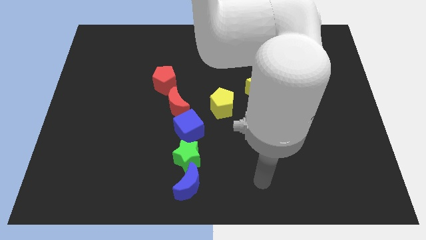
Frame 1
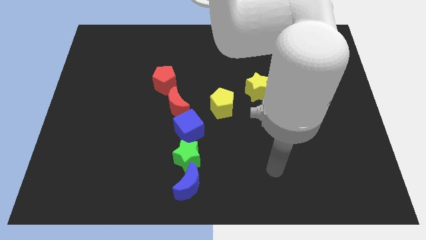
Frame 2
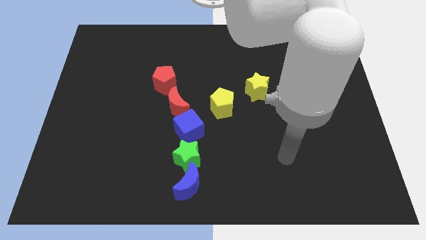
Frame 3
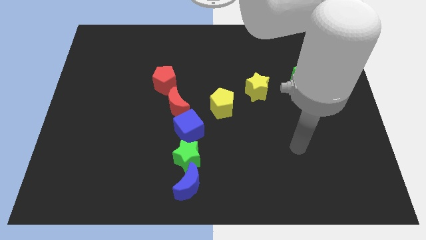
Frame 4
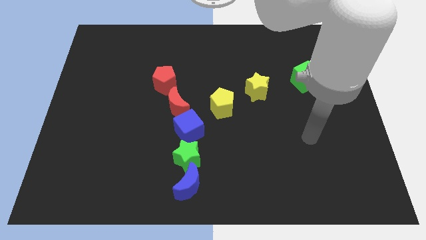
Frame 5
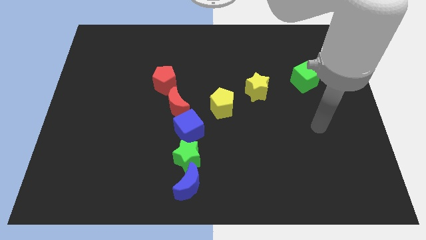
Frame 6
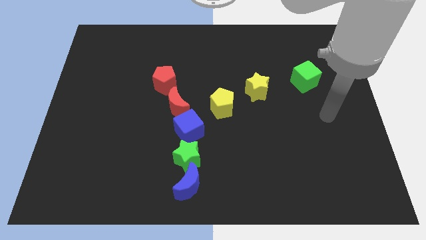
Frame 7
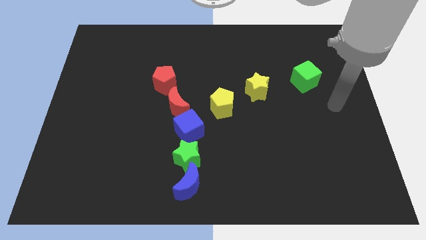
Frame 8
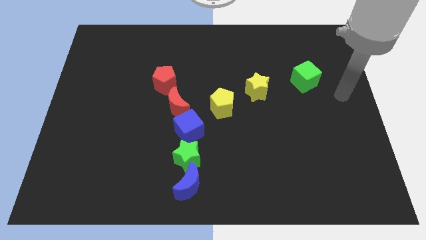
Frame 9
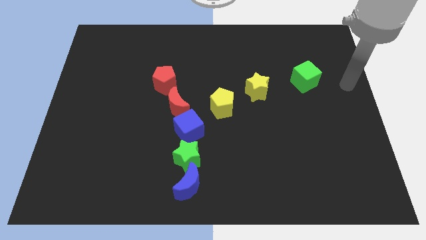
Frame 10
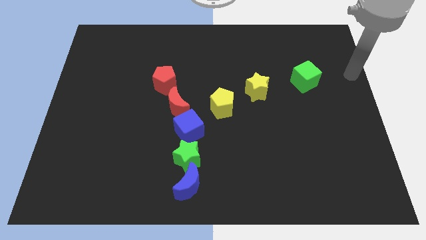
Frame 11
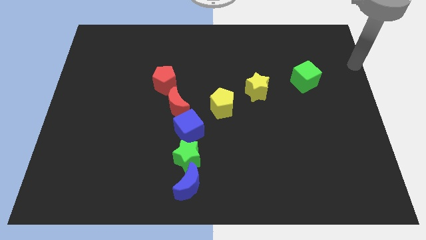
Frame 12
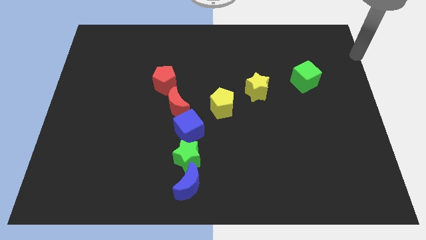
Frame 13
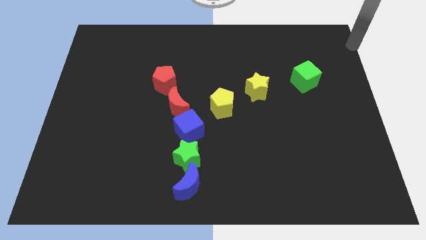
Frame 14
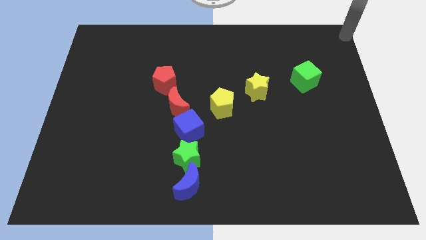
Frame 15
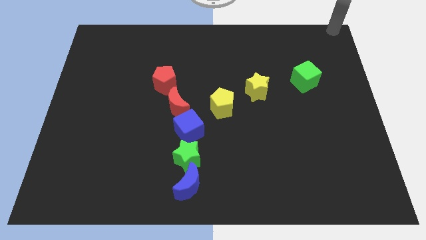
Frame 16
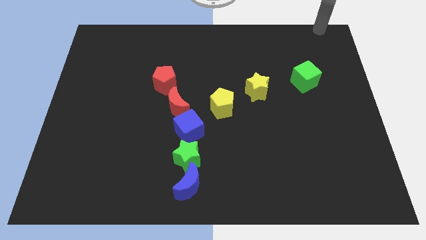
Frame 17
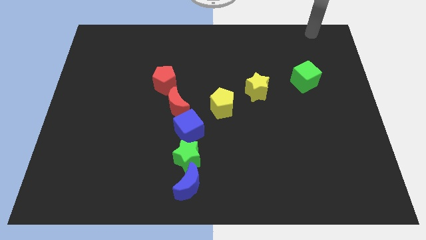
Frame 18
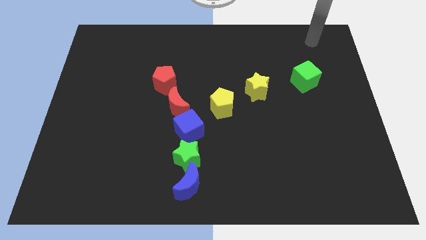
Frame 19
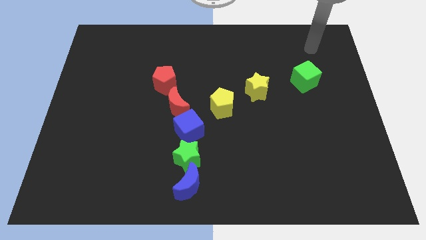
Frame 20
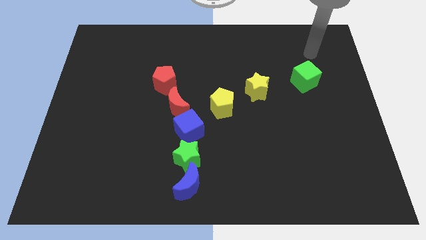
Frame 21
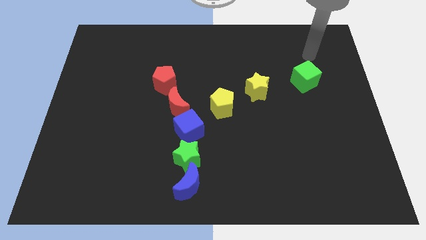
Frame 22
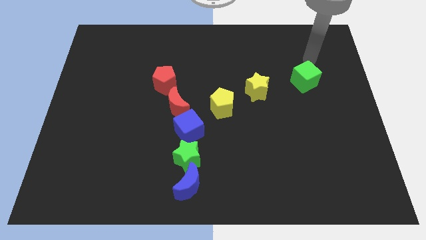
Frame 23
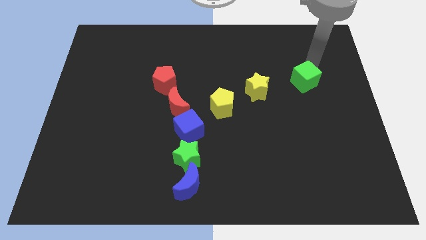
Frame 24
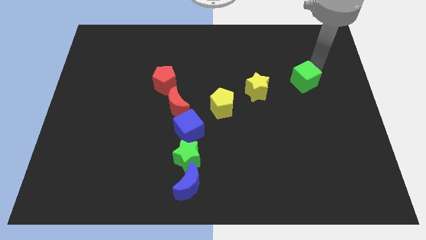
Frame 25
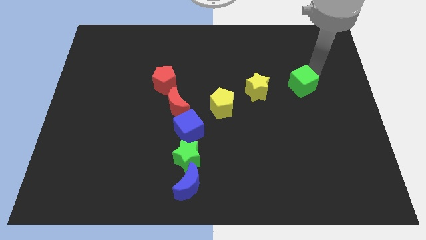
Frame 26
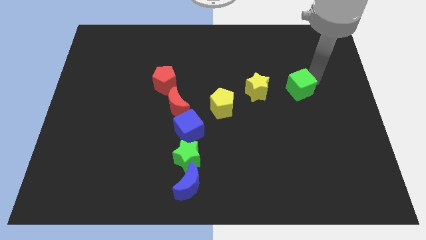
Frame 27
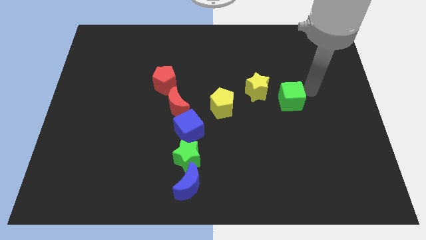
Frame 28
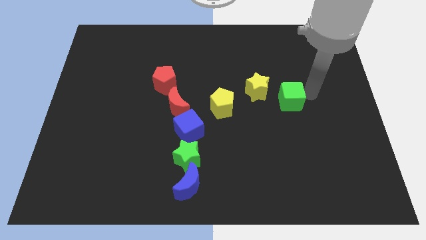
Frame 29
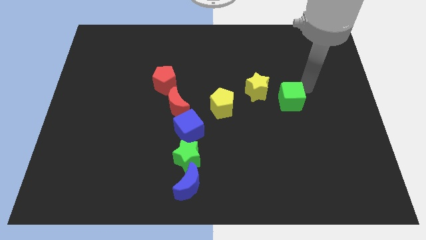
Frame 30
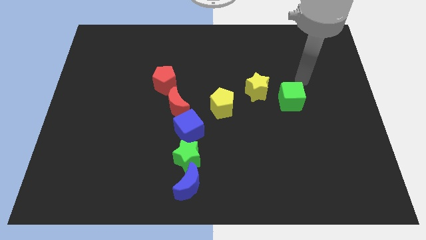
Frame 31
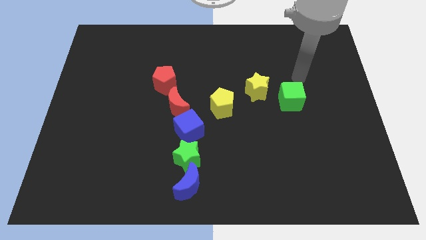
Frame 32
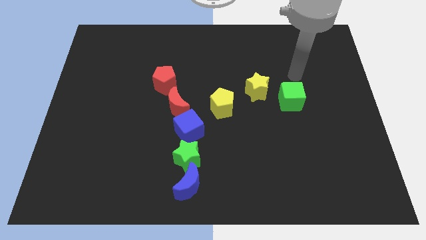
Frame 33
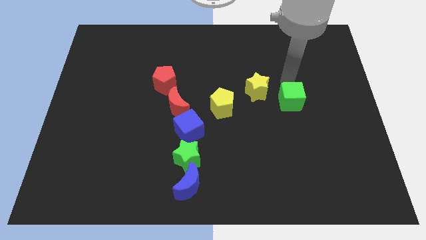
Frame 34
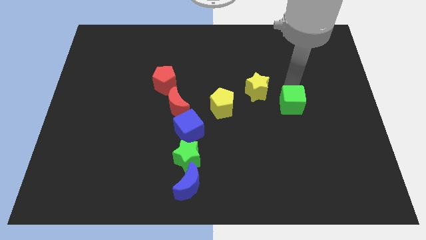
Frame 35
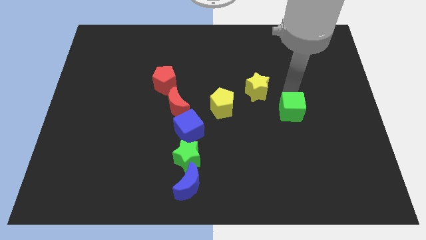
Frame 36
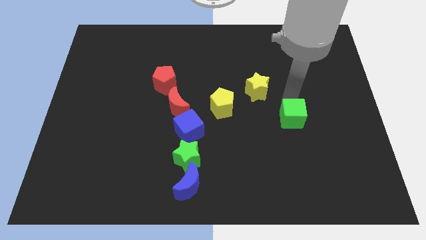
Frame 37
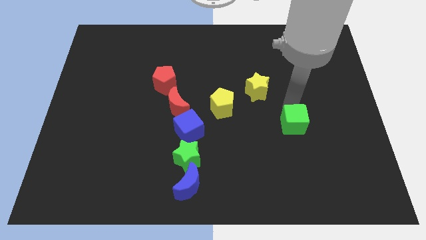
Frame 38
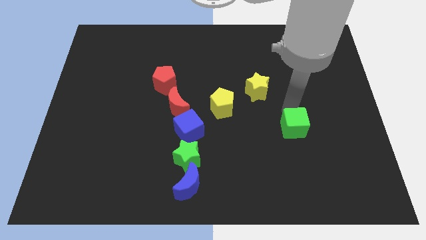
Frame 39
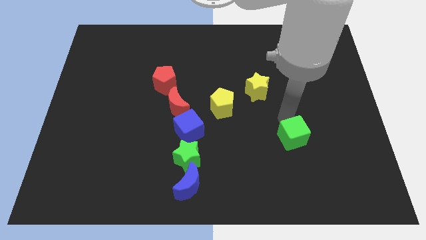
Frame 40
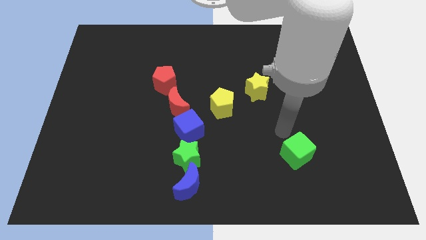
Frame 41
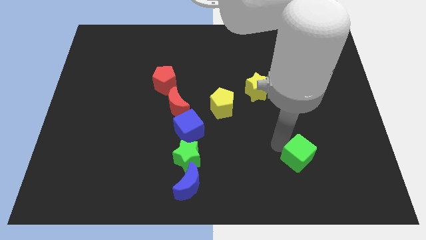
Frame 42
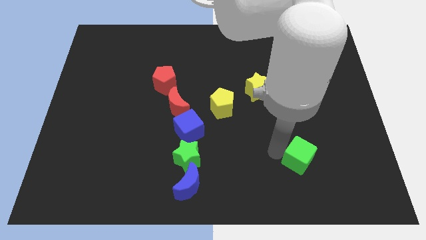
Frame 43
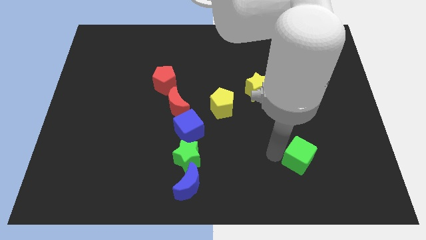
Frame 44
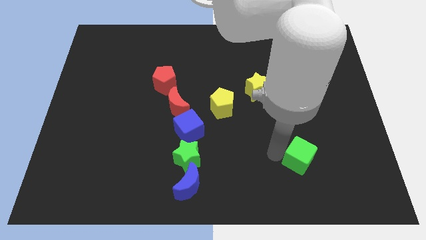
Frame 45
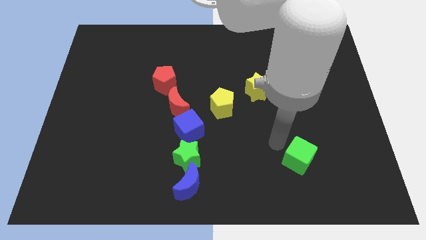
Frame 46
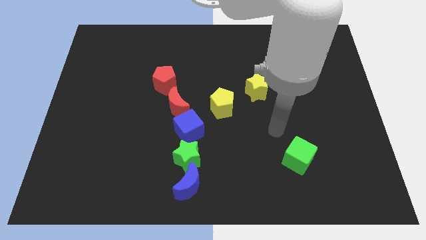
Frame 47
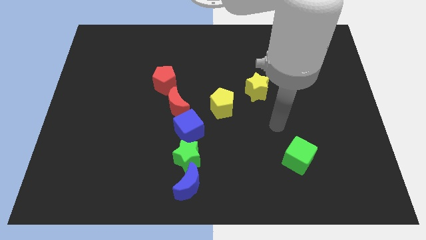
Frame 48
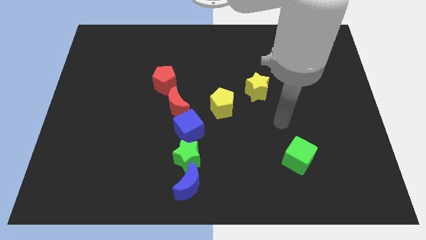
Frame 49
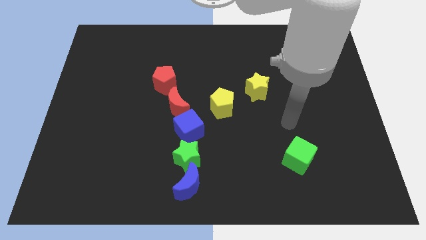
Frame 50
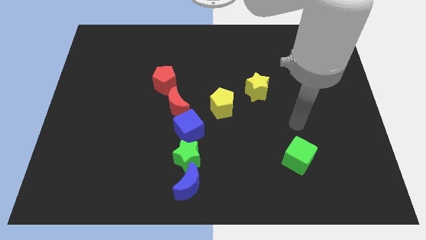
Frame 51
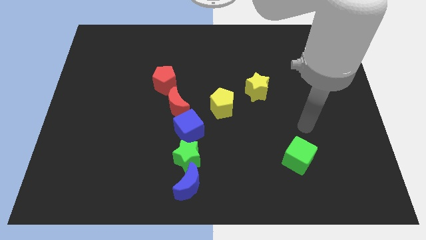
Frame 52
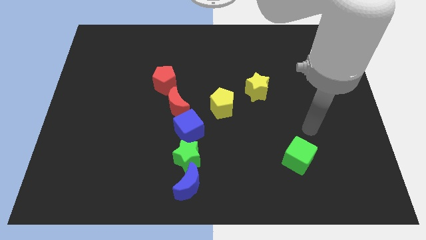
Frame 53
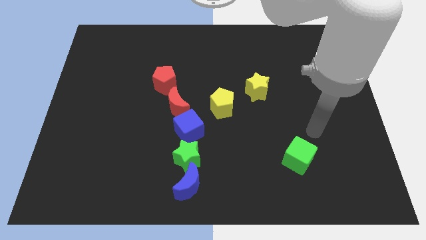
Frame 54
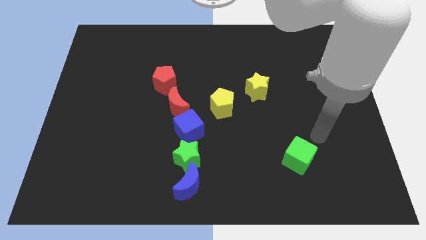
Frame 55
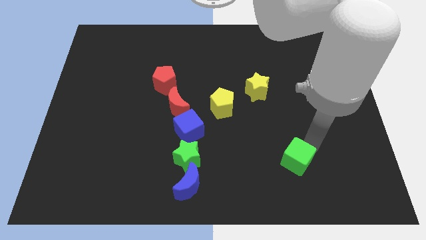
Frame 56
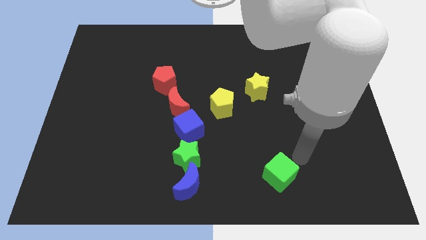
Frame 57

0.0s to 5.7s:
move the green cube to the bottom side

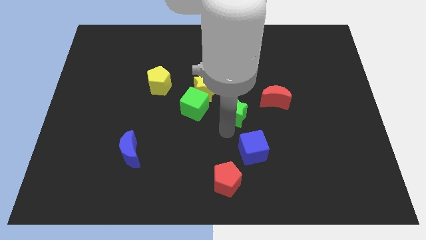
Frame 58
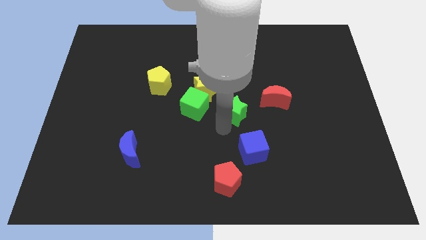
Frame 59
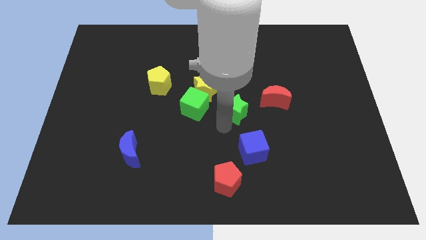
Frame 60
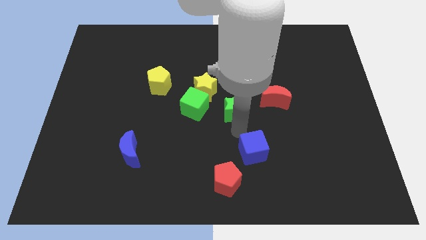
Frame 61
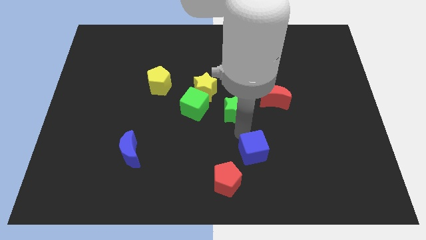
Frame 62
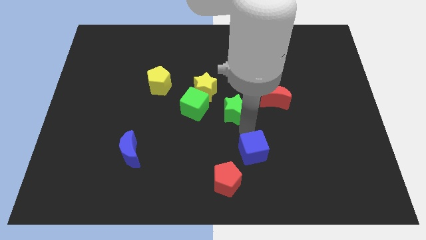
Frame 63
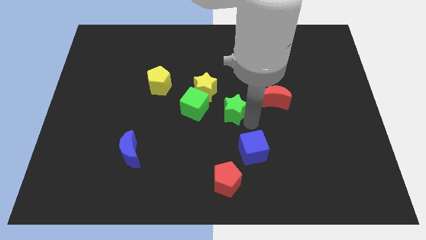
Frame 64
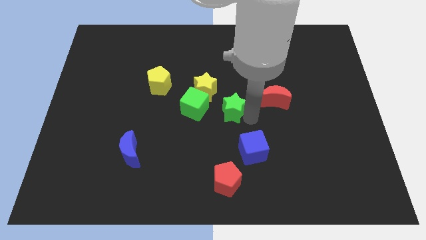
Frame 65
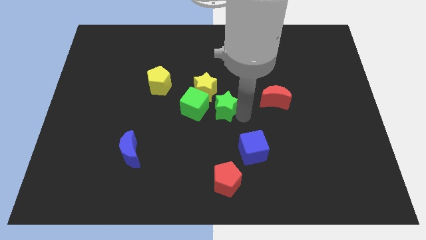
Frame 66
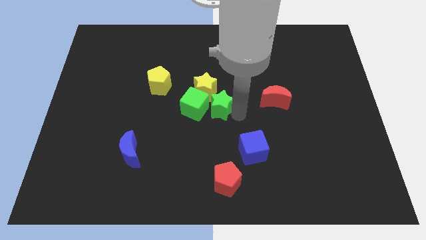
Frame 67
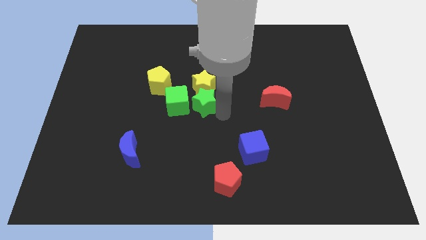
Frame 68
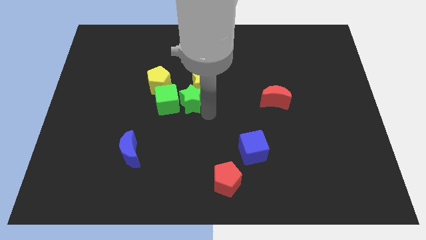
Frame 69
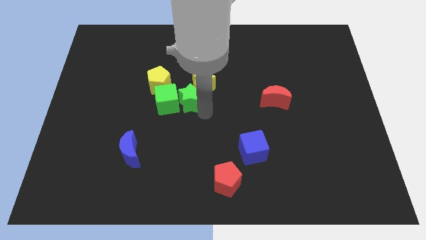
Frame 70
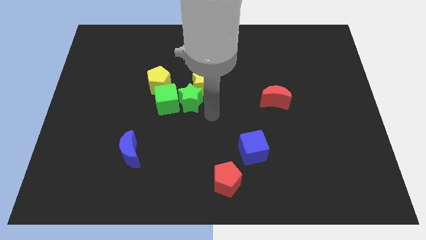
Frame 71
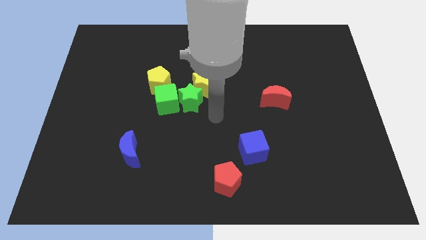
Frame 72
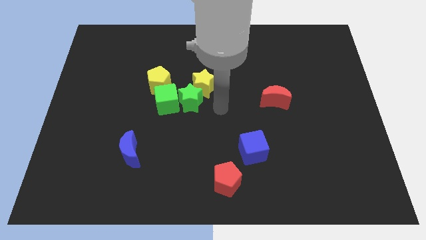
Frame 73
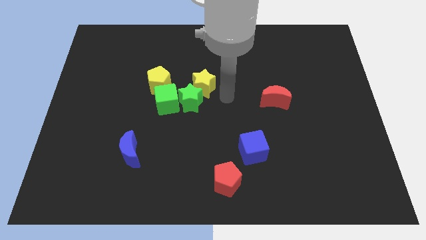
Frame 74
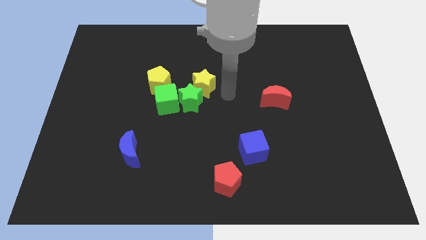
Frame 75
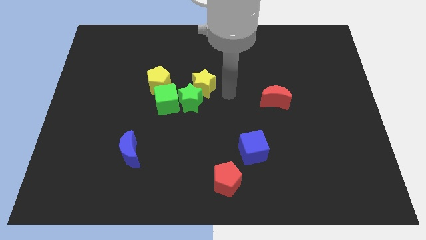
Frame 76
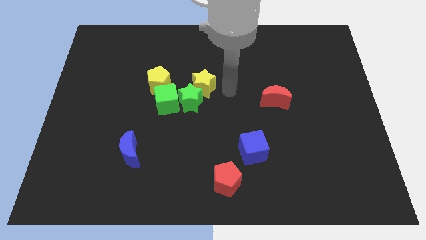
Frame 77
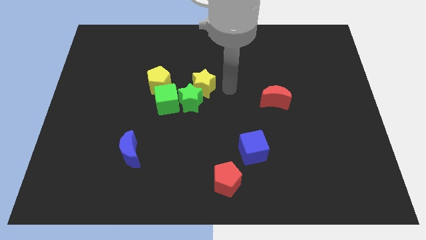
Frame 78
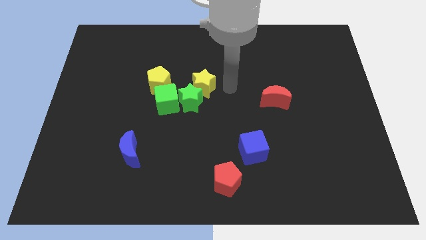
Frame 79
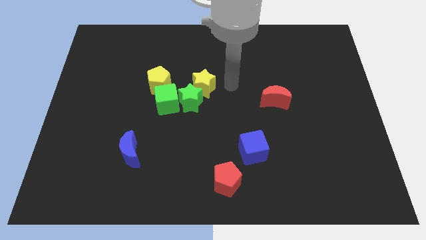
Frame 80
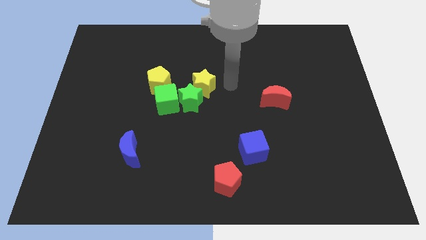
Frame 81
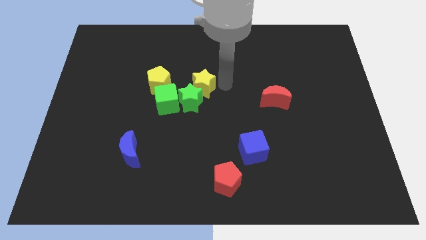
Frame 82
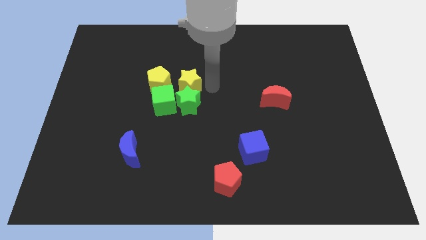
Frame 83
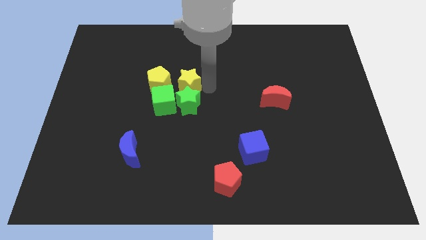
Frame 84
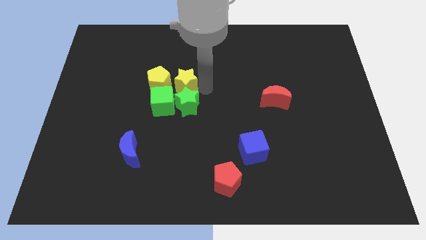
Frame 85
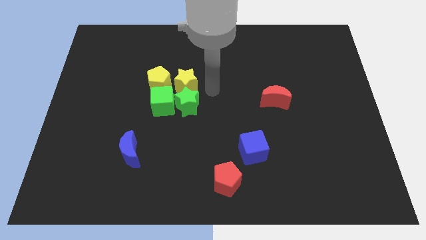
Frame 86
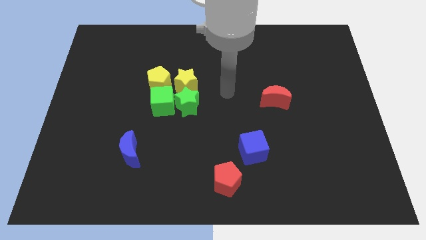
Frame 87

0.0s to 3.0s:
push yellow star into the group

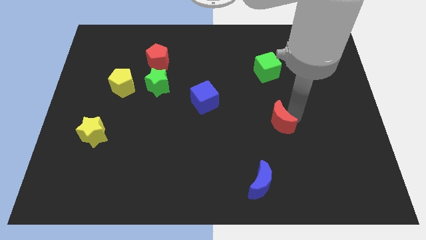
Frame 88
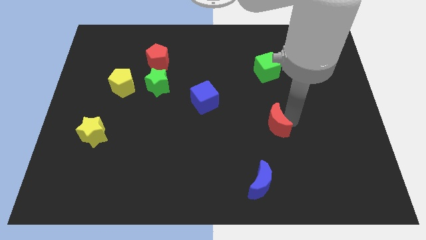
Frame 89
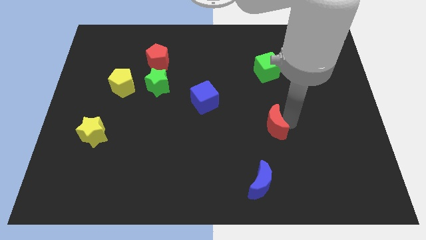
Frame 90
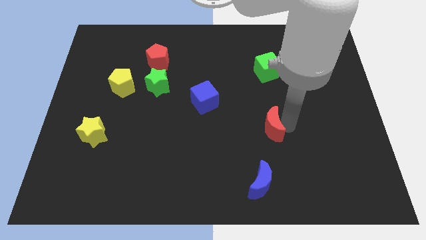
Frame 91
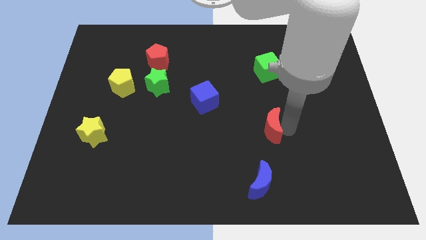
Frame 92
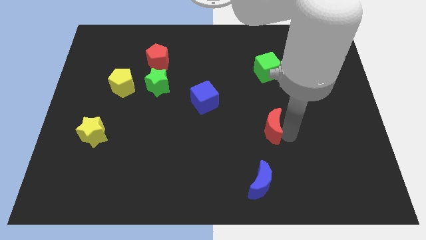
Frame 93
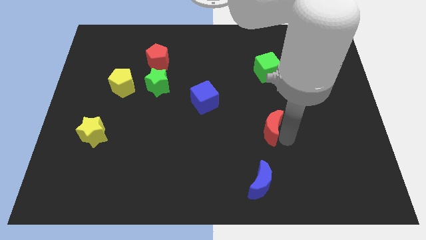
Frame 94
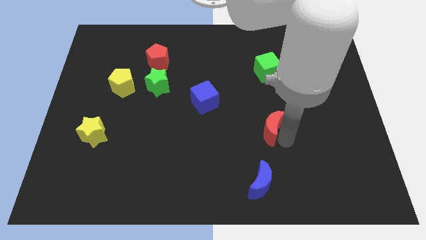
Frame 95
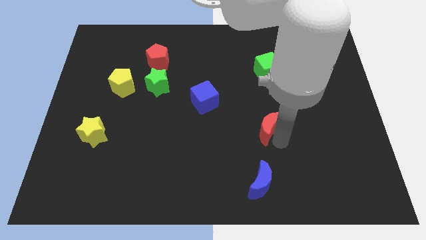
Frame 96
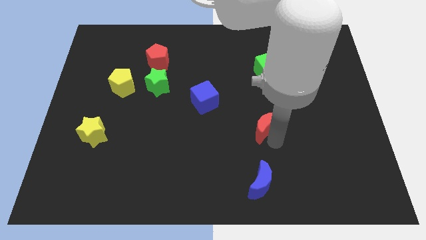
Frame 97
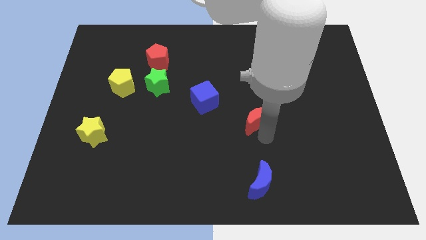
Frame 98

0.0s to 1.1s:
place red moon vertical to blue moon
